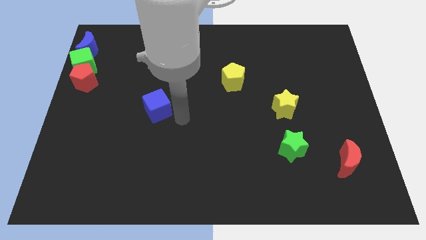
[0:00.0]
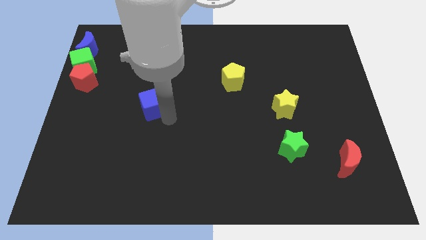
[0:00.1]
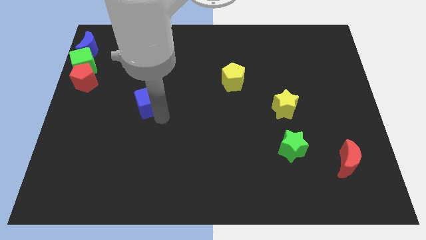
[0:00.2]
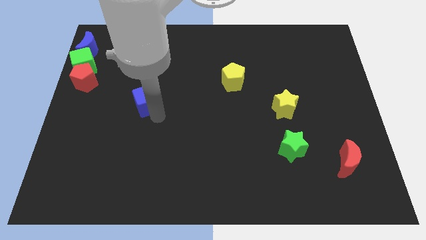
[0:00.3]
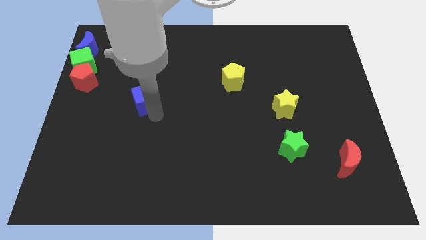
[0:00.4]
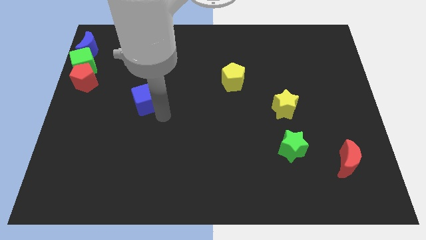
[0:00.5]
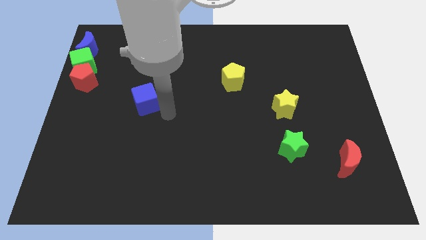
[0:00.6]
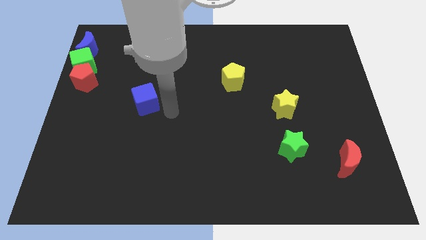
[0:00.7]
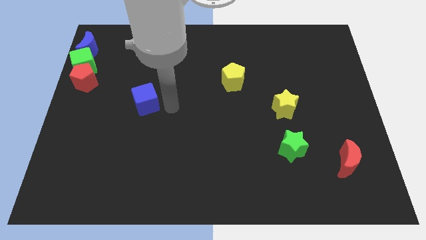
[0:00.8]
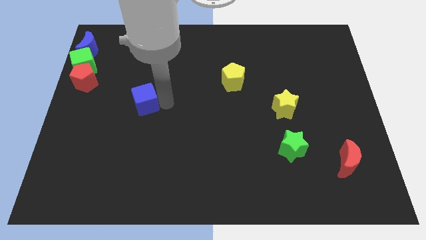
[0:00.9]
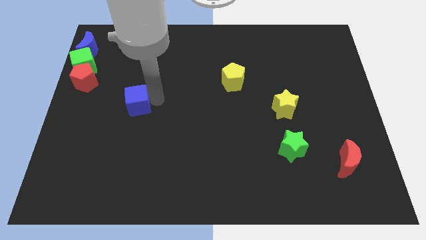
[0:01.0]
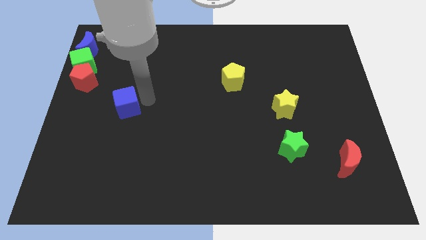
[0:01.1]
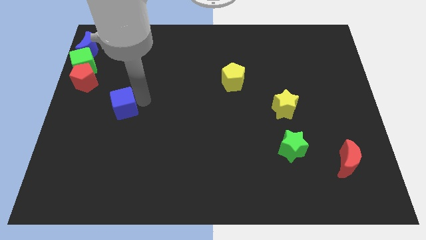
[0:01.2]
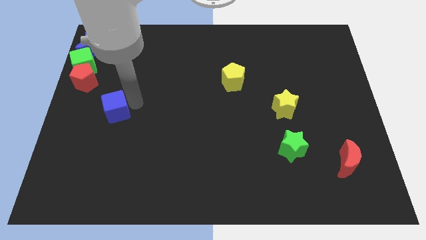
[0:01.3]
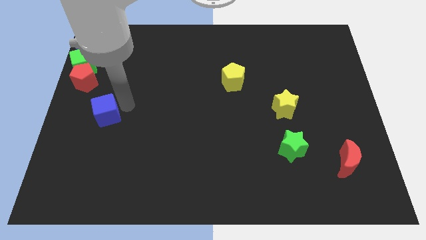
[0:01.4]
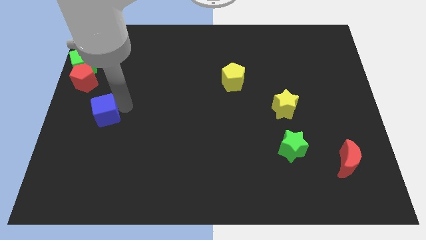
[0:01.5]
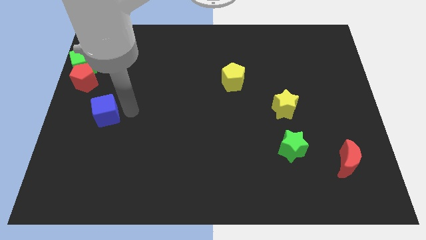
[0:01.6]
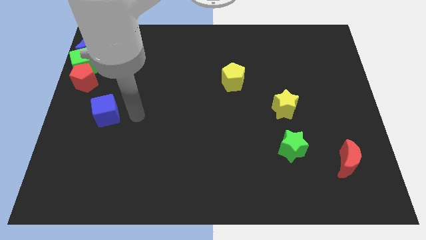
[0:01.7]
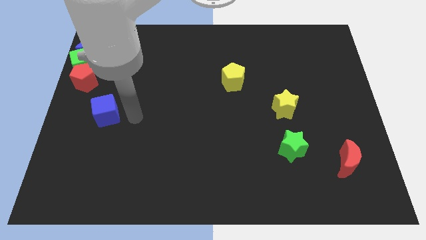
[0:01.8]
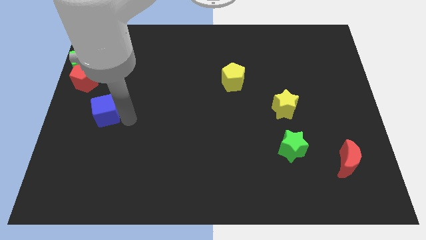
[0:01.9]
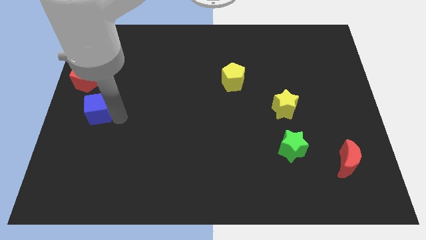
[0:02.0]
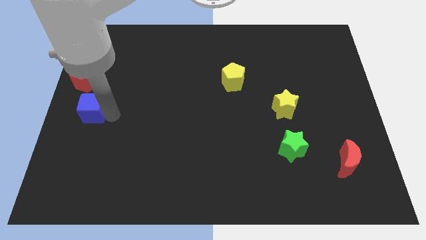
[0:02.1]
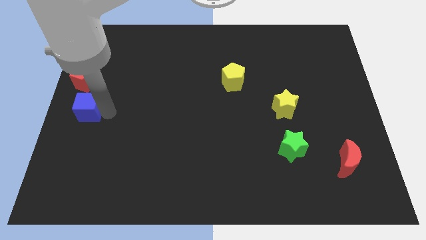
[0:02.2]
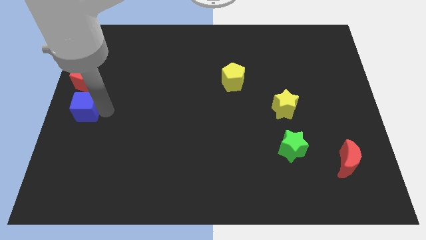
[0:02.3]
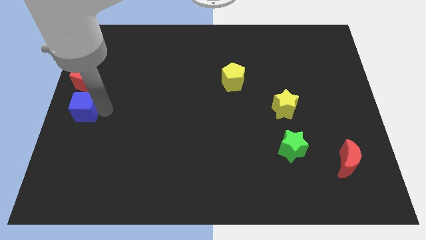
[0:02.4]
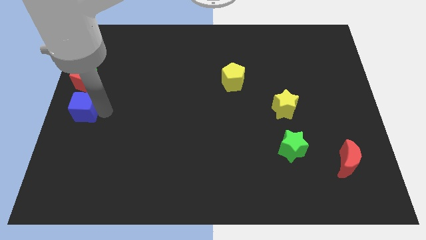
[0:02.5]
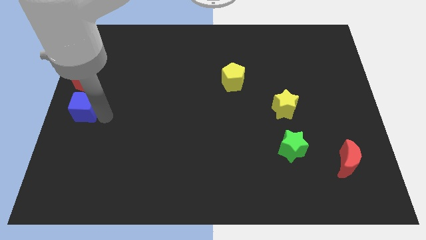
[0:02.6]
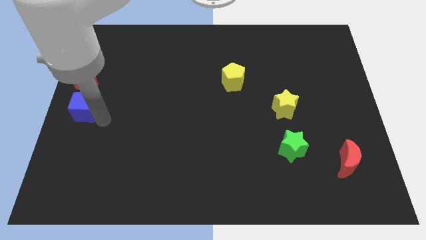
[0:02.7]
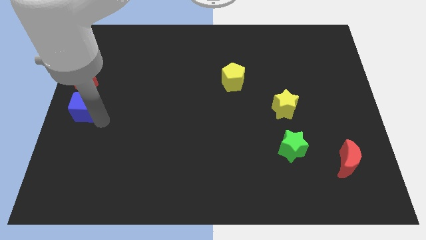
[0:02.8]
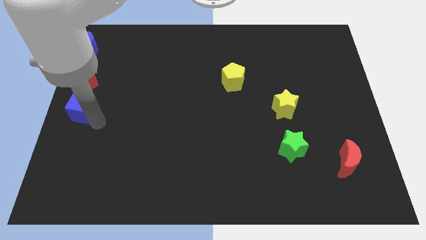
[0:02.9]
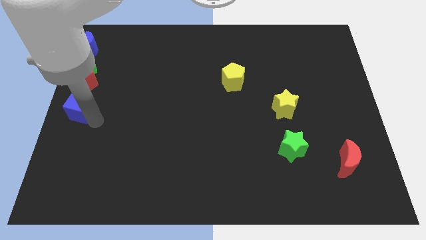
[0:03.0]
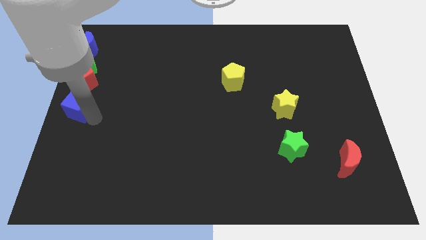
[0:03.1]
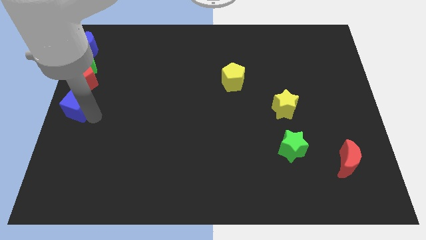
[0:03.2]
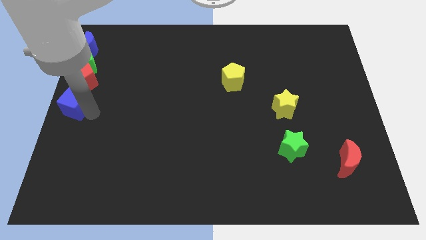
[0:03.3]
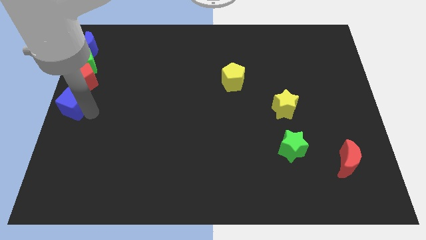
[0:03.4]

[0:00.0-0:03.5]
move the blue cube to the bottom of the red pentagon

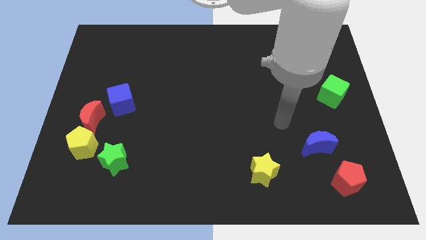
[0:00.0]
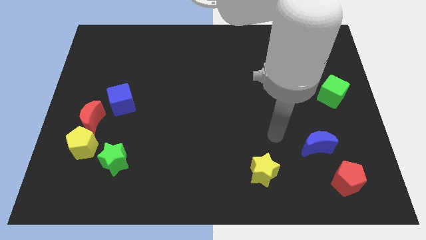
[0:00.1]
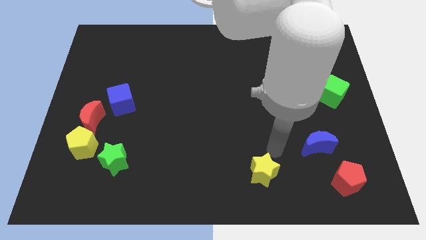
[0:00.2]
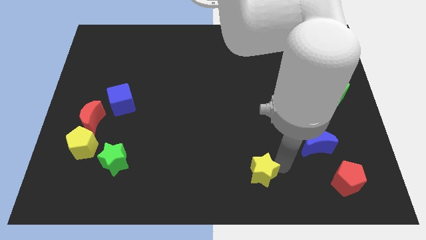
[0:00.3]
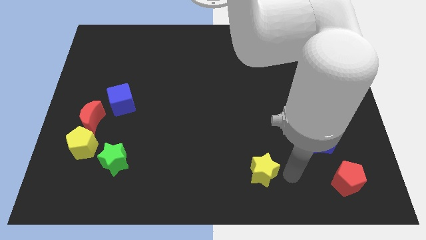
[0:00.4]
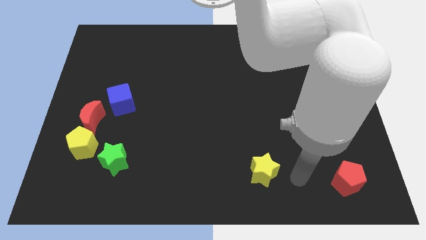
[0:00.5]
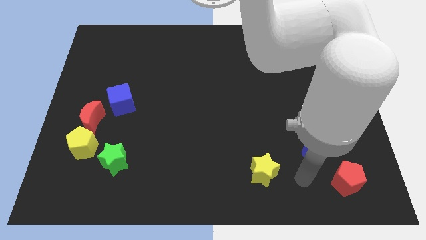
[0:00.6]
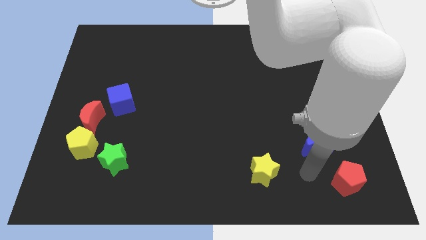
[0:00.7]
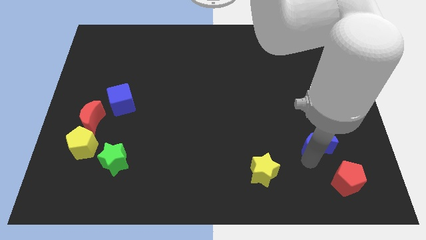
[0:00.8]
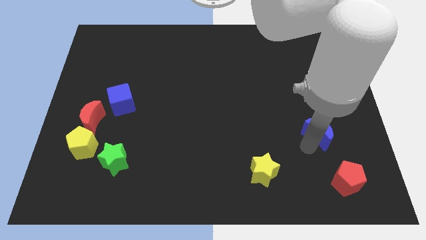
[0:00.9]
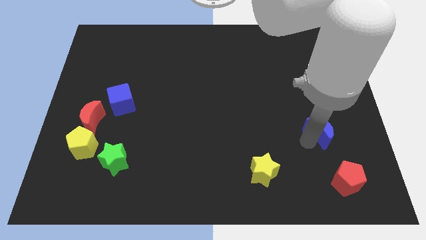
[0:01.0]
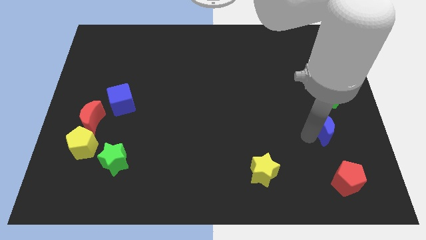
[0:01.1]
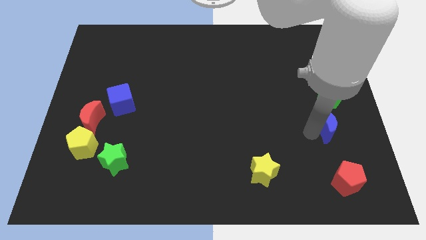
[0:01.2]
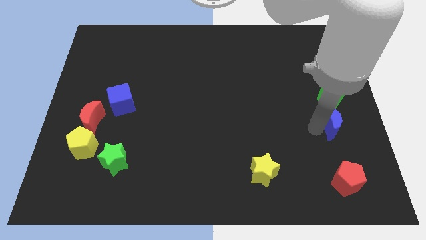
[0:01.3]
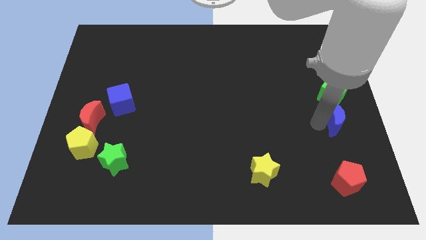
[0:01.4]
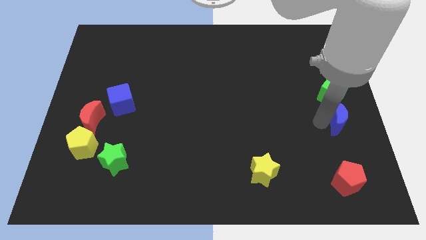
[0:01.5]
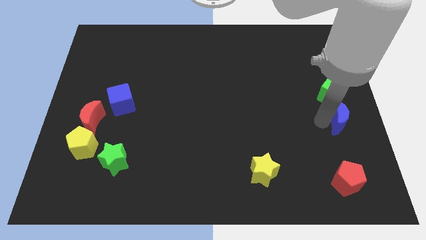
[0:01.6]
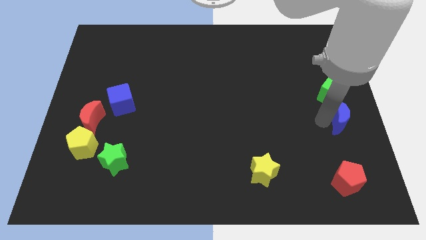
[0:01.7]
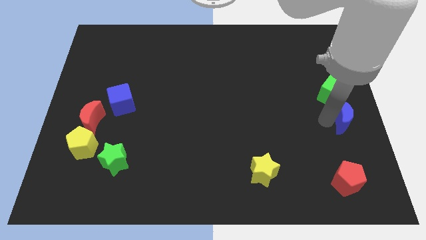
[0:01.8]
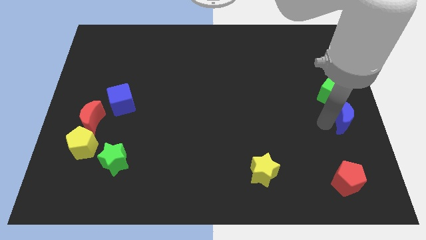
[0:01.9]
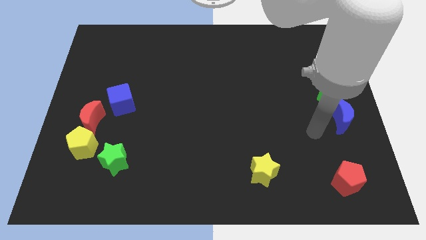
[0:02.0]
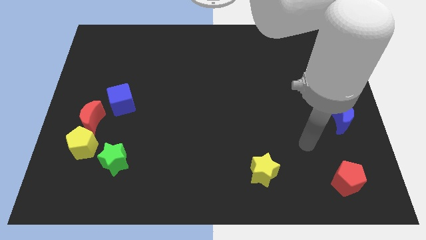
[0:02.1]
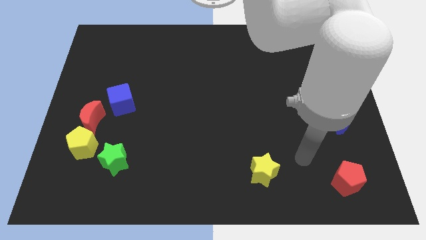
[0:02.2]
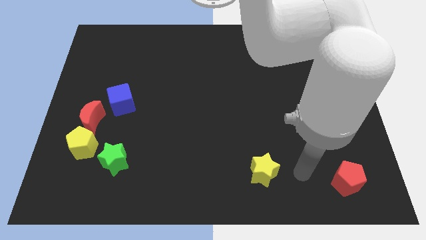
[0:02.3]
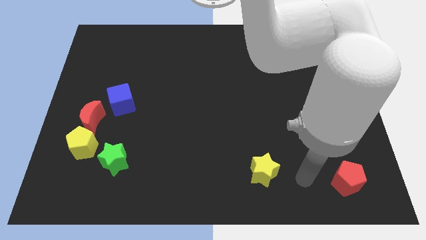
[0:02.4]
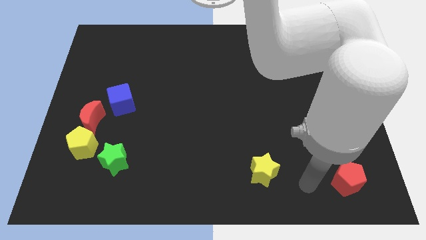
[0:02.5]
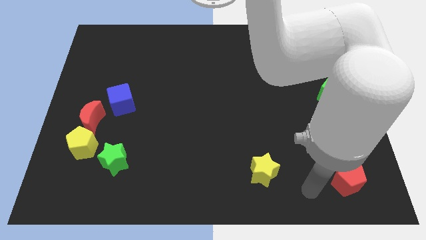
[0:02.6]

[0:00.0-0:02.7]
place the blue moon down to the green cube

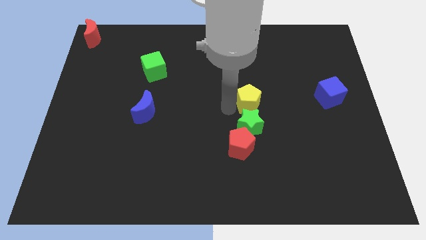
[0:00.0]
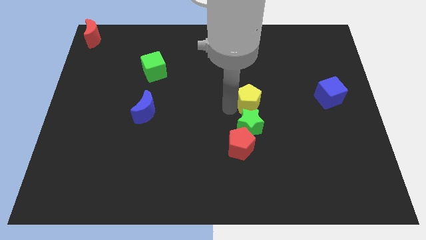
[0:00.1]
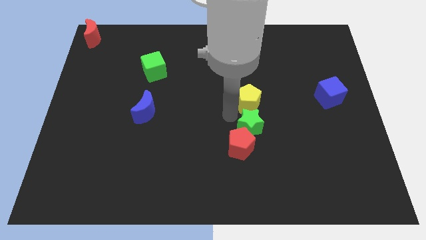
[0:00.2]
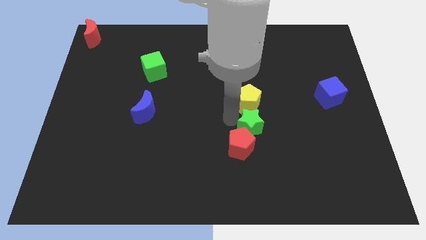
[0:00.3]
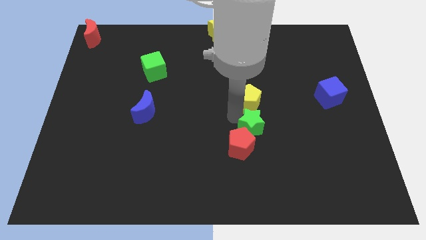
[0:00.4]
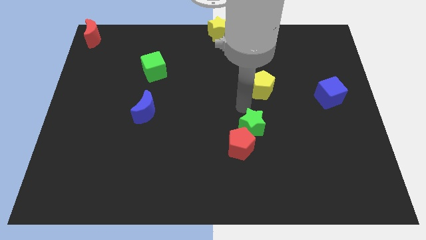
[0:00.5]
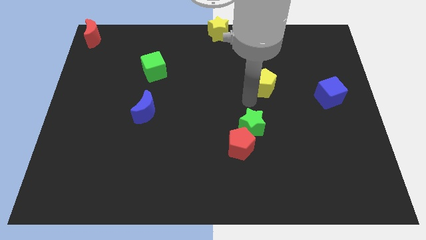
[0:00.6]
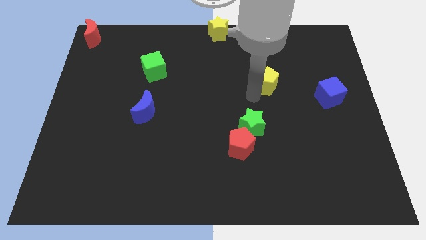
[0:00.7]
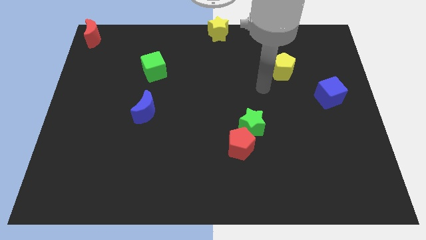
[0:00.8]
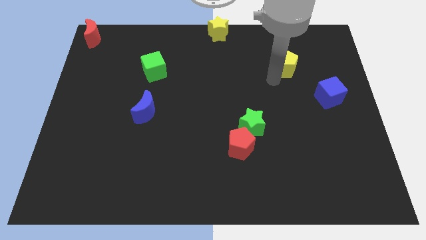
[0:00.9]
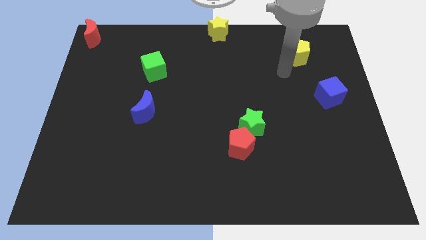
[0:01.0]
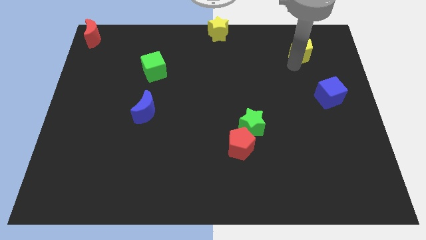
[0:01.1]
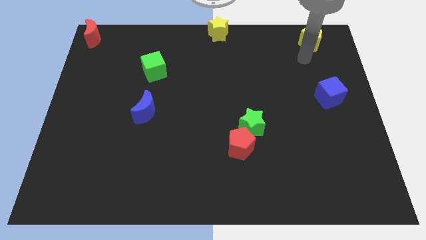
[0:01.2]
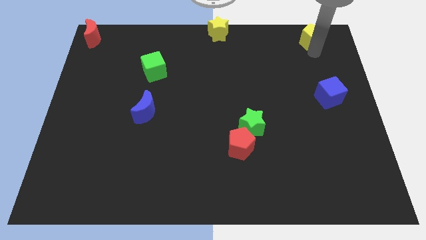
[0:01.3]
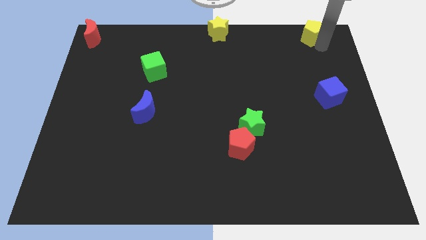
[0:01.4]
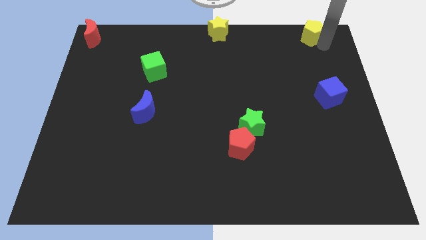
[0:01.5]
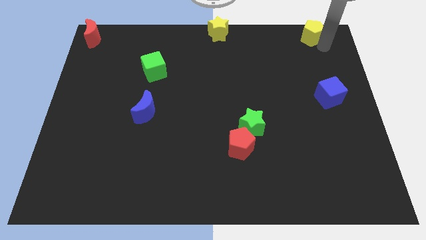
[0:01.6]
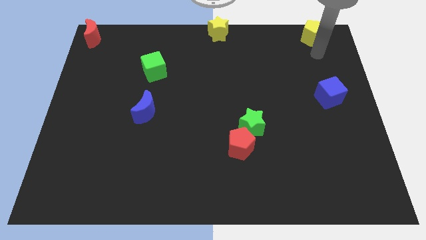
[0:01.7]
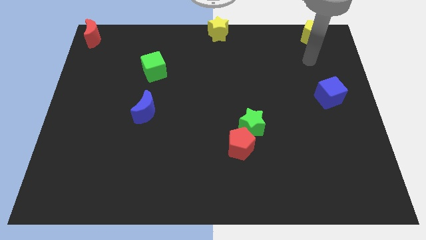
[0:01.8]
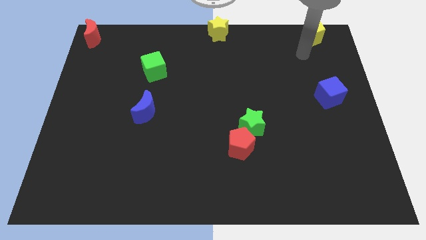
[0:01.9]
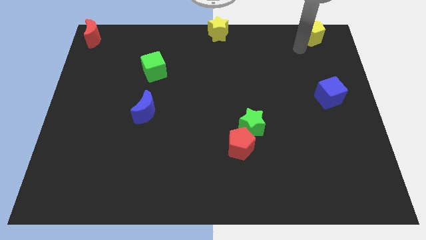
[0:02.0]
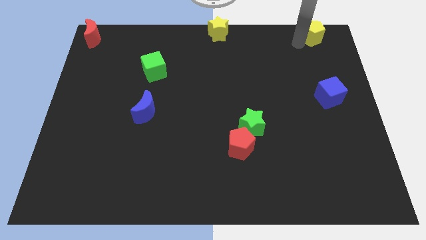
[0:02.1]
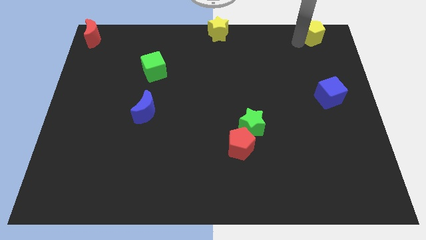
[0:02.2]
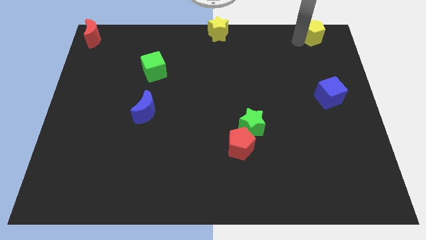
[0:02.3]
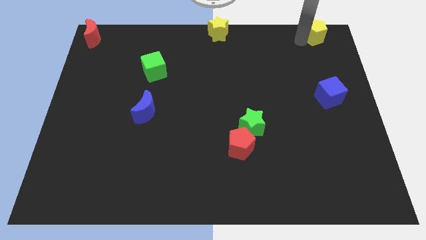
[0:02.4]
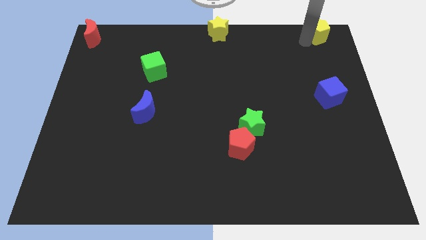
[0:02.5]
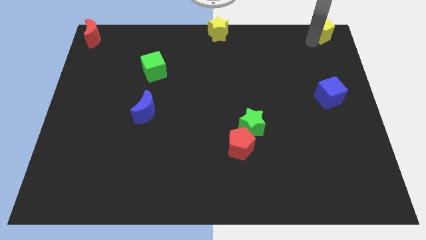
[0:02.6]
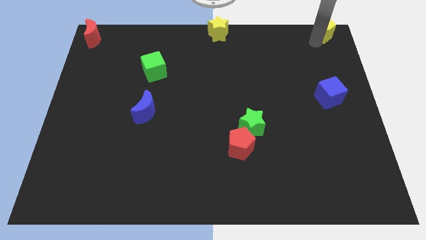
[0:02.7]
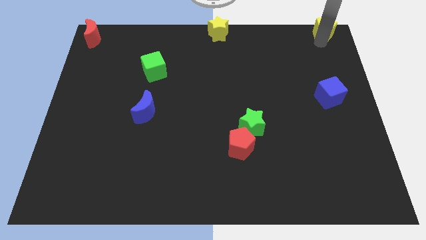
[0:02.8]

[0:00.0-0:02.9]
place yellow pentagon to the top right of the board

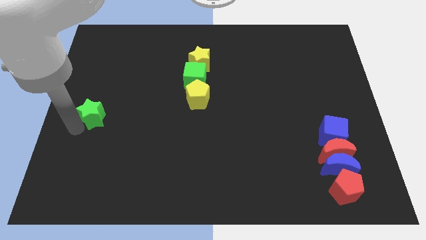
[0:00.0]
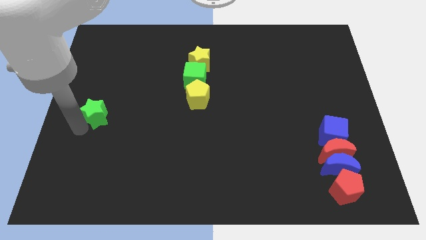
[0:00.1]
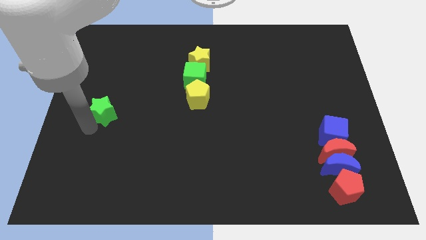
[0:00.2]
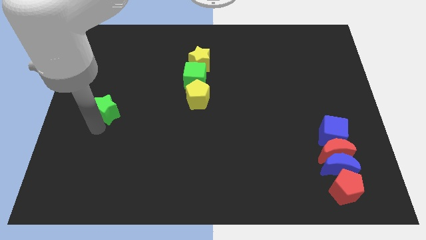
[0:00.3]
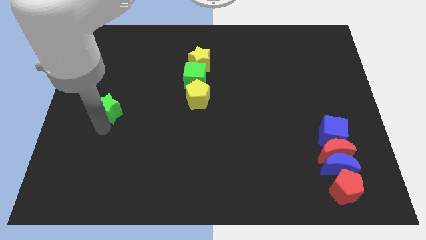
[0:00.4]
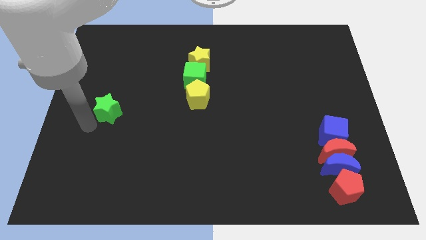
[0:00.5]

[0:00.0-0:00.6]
push green star slightly towards right
